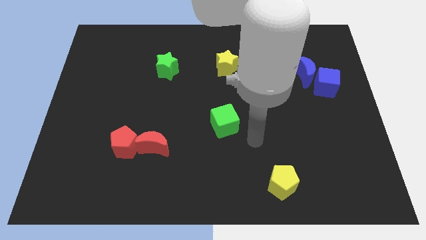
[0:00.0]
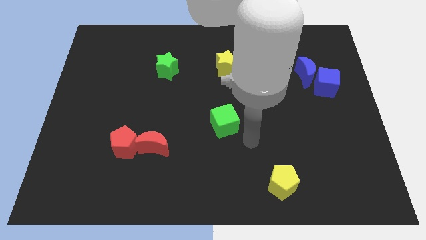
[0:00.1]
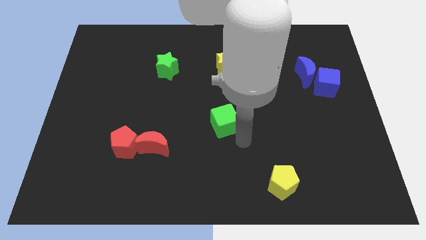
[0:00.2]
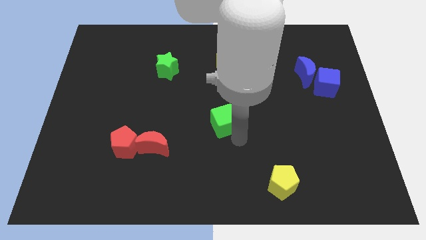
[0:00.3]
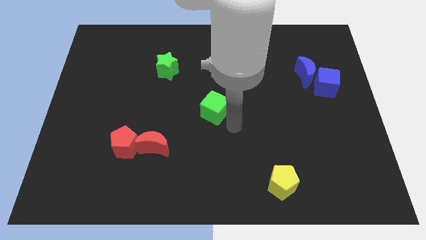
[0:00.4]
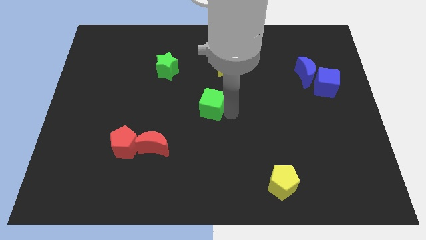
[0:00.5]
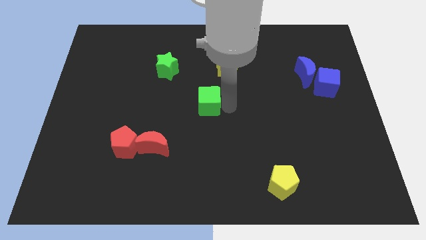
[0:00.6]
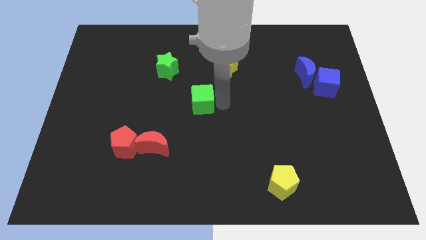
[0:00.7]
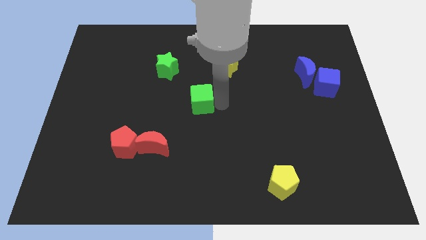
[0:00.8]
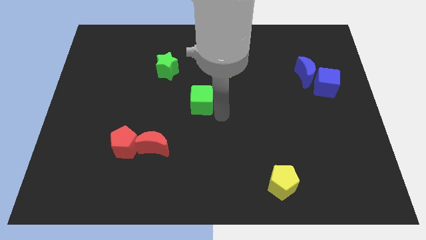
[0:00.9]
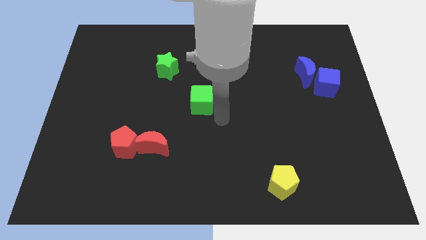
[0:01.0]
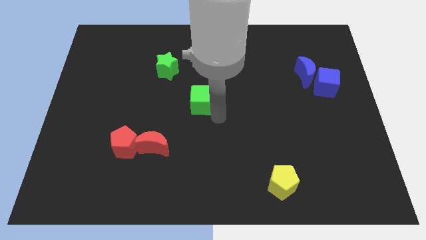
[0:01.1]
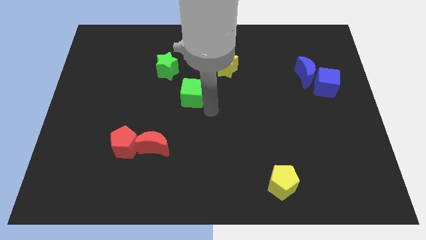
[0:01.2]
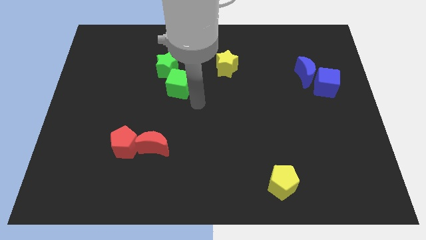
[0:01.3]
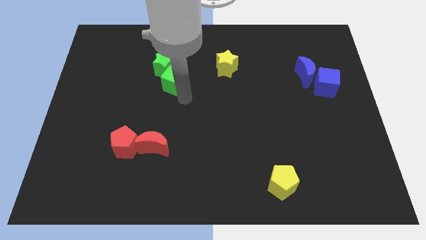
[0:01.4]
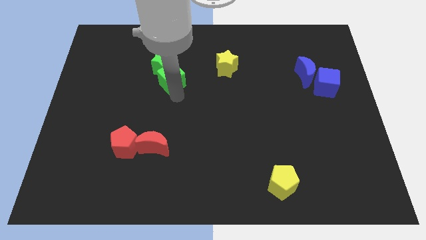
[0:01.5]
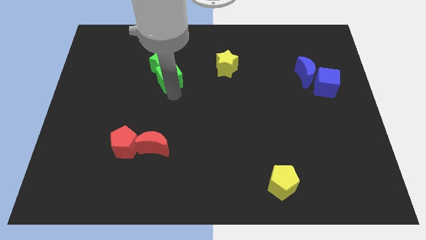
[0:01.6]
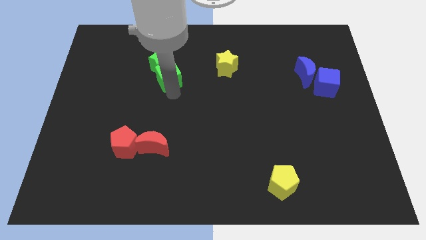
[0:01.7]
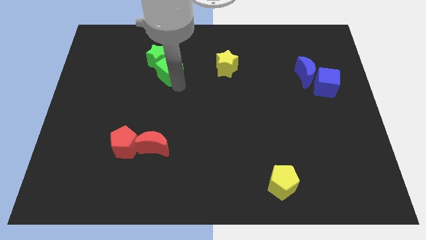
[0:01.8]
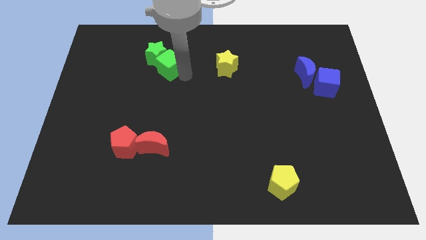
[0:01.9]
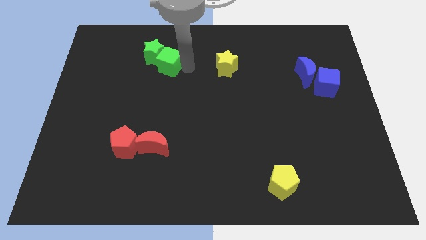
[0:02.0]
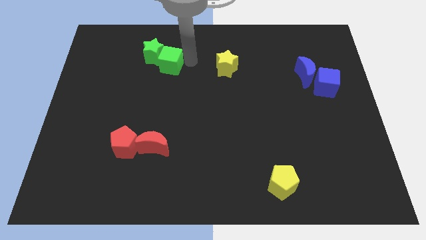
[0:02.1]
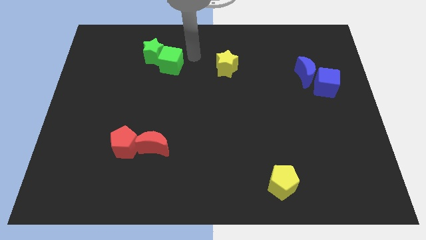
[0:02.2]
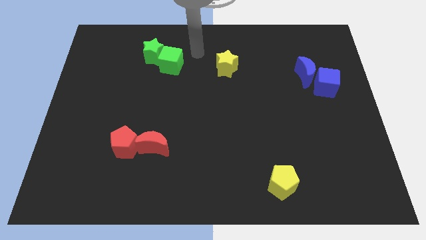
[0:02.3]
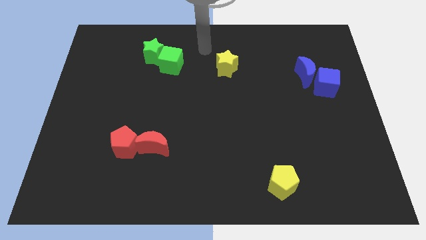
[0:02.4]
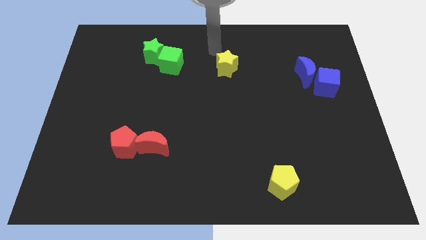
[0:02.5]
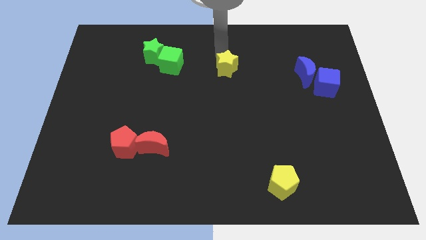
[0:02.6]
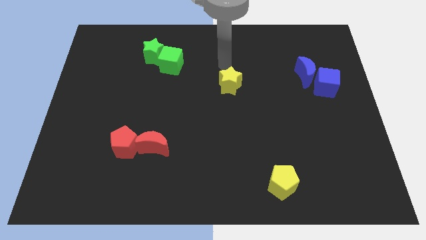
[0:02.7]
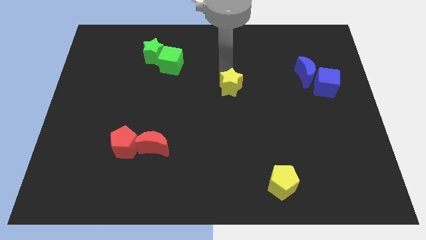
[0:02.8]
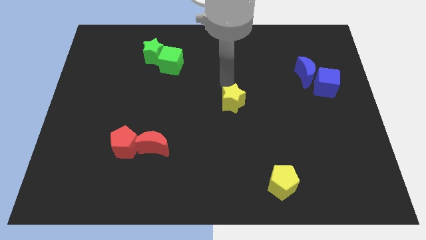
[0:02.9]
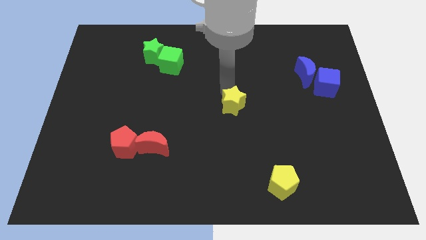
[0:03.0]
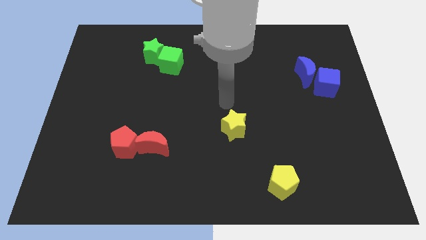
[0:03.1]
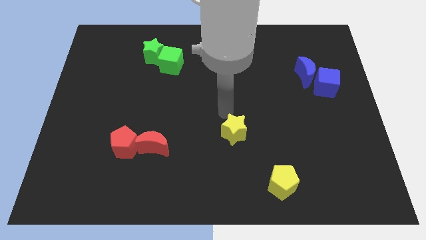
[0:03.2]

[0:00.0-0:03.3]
push yellow star slightly towards down

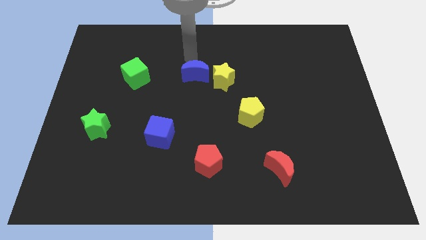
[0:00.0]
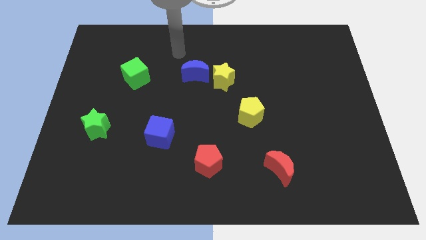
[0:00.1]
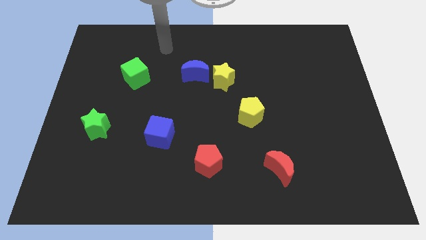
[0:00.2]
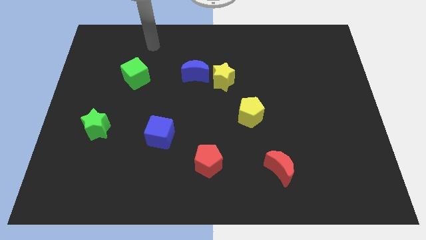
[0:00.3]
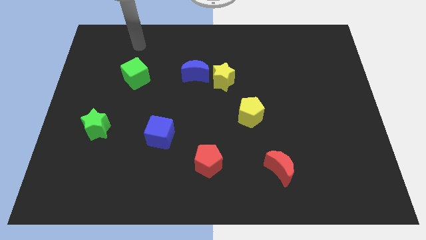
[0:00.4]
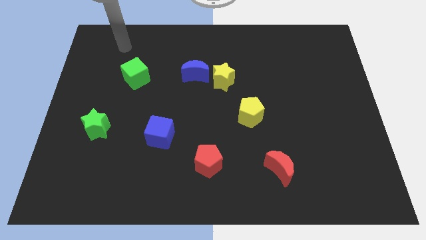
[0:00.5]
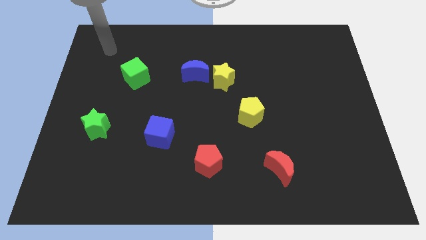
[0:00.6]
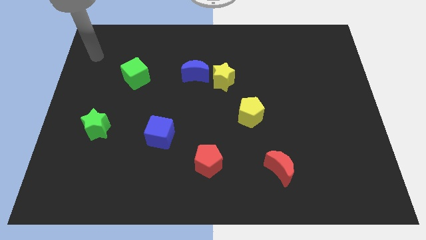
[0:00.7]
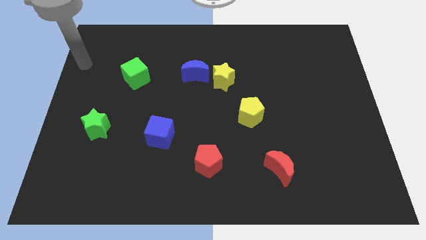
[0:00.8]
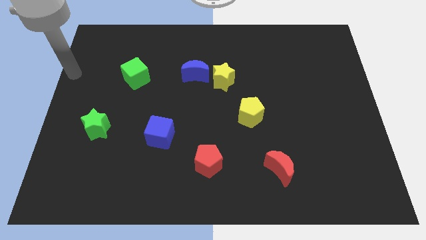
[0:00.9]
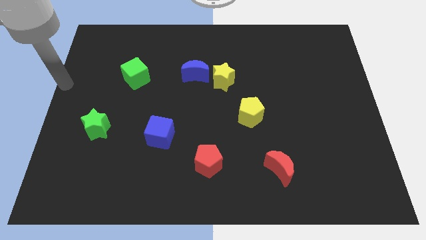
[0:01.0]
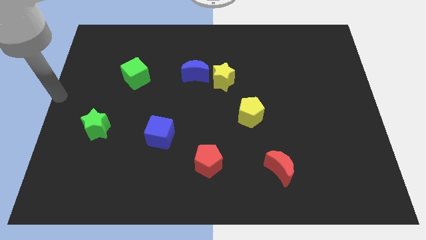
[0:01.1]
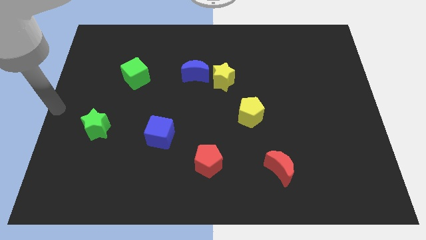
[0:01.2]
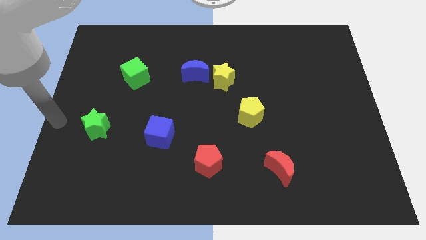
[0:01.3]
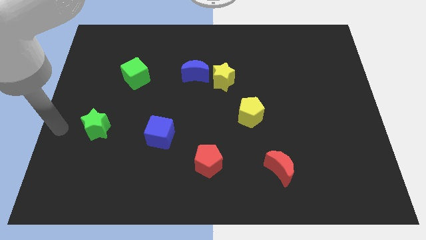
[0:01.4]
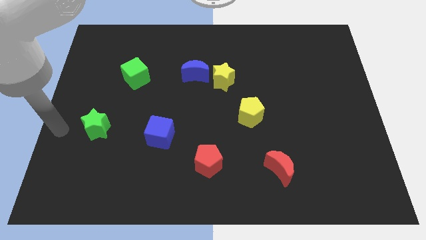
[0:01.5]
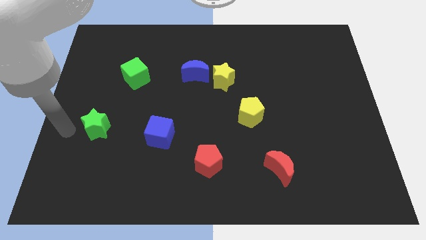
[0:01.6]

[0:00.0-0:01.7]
point your arm at the left side of the green star

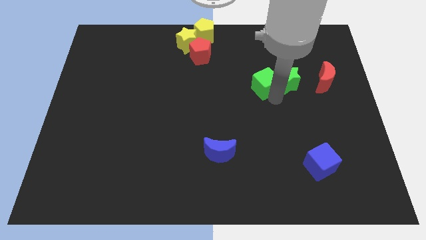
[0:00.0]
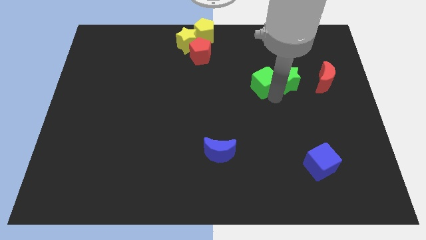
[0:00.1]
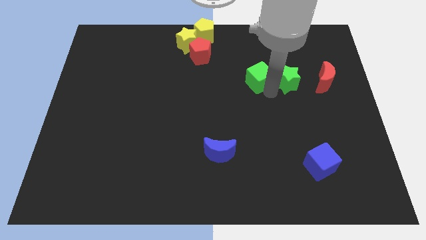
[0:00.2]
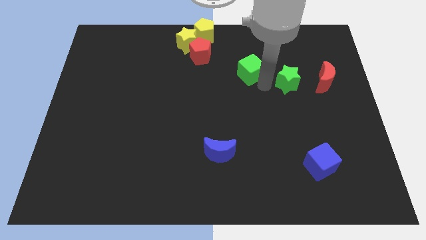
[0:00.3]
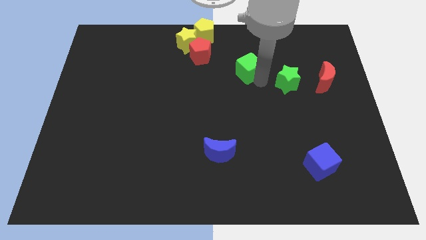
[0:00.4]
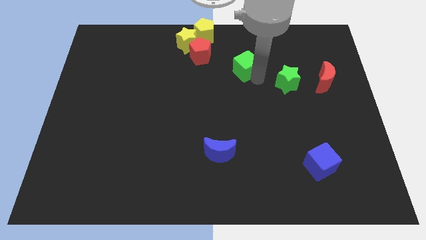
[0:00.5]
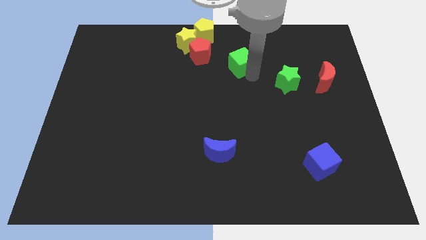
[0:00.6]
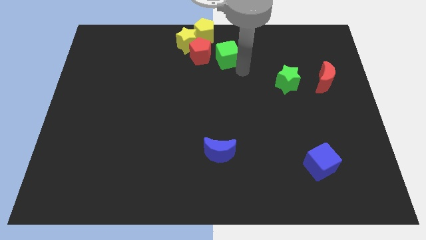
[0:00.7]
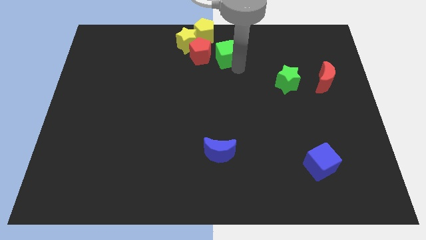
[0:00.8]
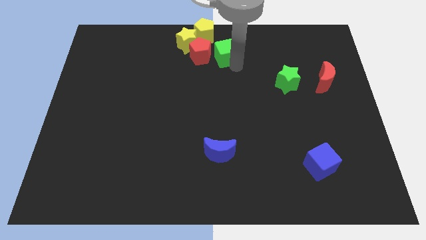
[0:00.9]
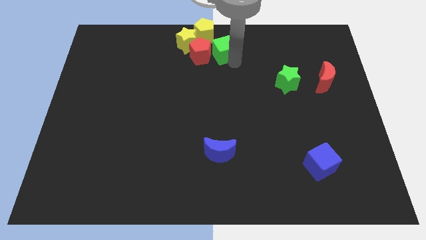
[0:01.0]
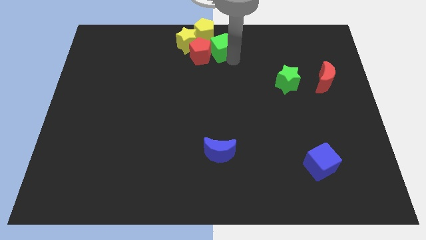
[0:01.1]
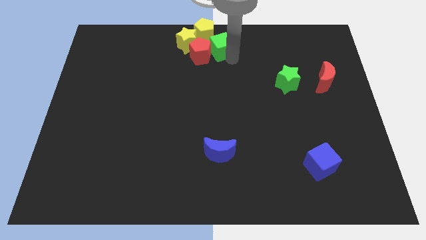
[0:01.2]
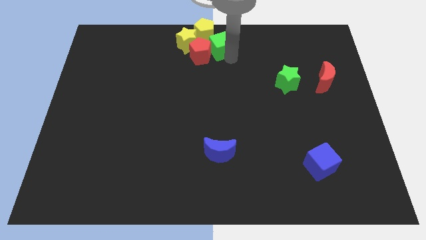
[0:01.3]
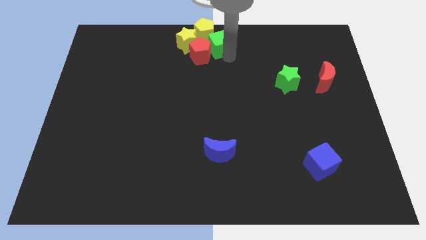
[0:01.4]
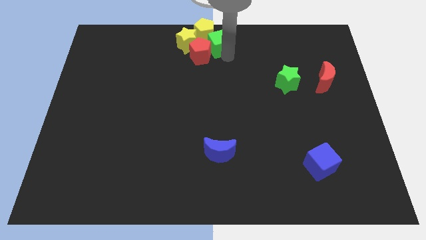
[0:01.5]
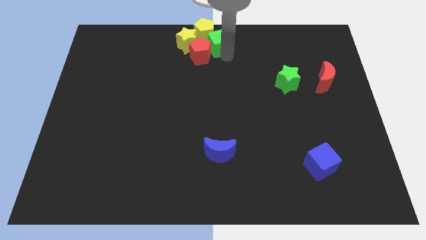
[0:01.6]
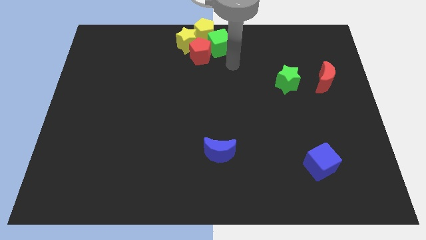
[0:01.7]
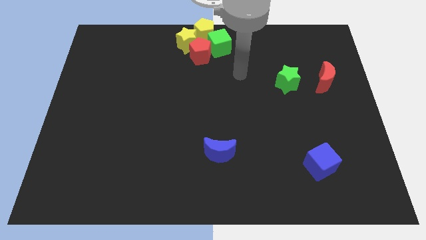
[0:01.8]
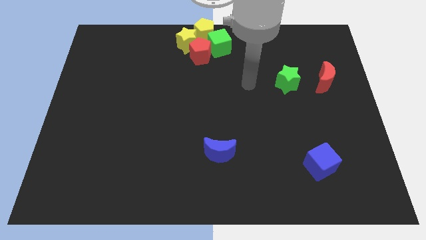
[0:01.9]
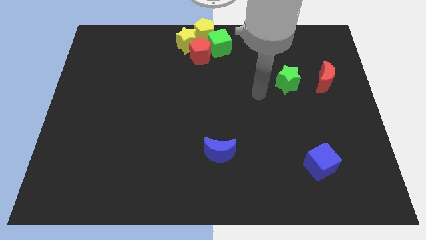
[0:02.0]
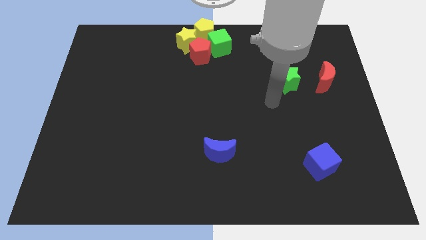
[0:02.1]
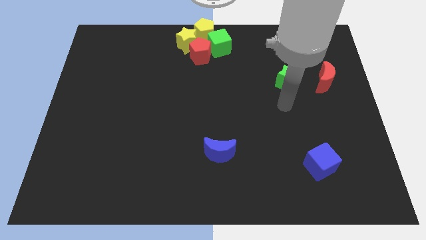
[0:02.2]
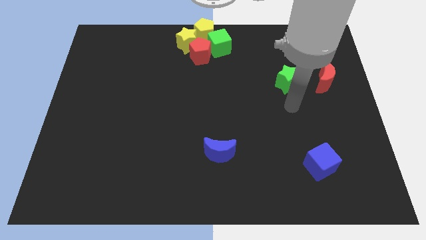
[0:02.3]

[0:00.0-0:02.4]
move the green cube away from the green star

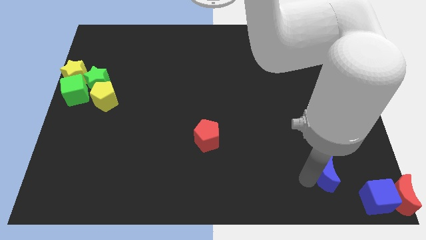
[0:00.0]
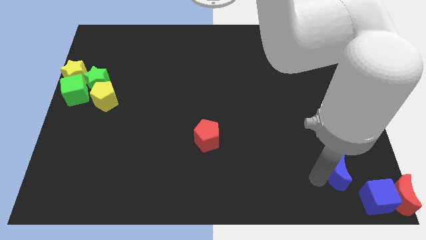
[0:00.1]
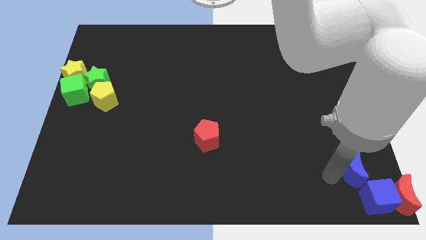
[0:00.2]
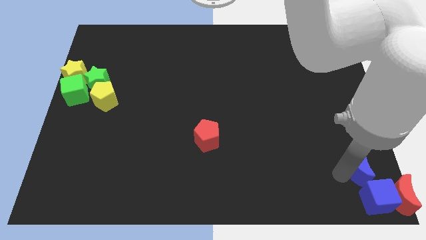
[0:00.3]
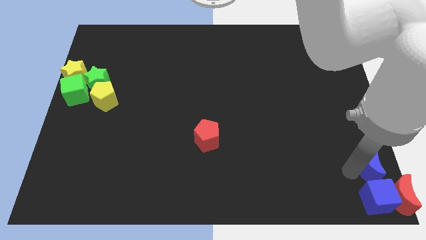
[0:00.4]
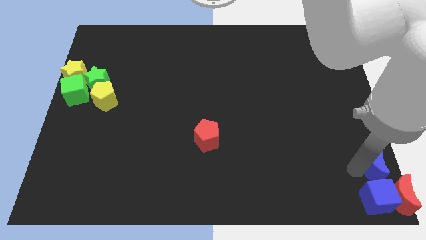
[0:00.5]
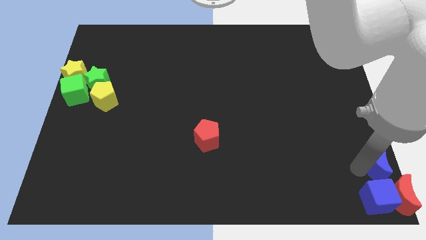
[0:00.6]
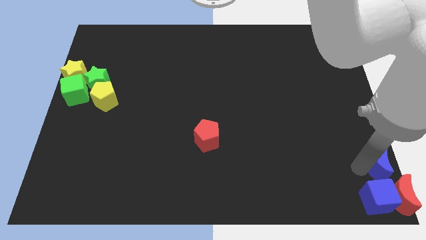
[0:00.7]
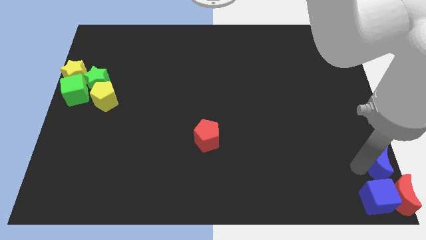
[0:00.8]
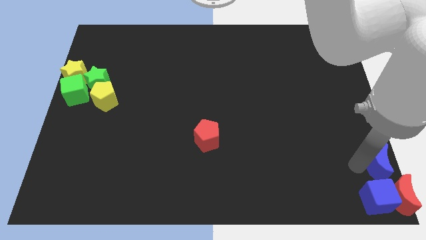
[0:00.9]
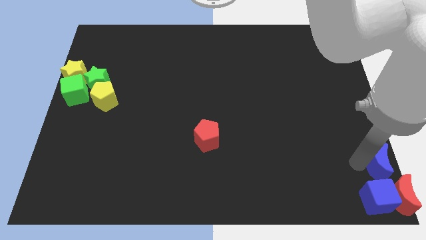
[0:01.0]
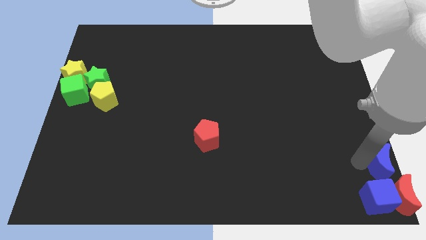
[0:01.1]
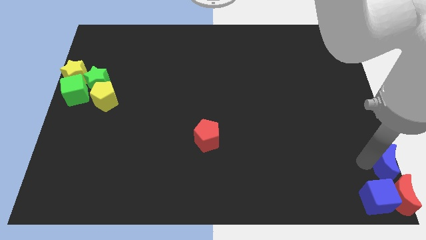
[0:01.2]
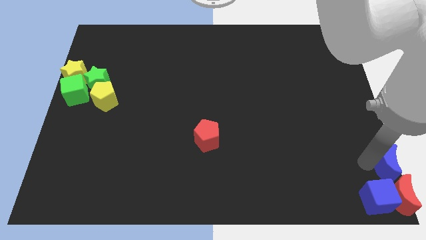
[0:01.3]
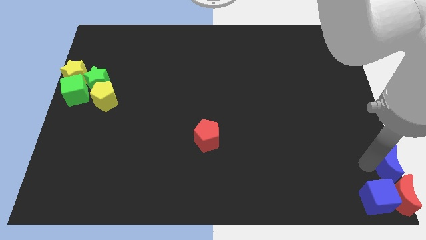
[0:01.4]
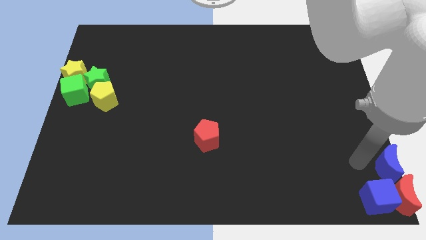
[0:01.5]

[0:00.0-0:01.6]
push the blue crescent above to the red crescent
